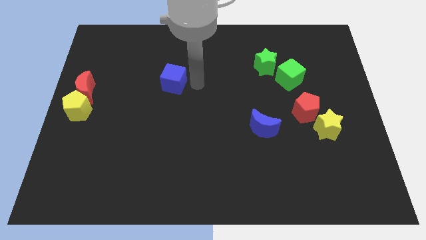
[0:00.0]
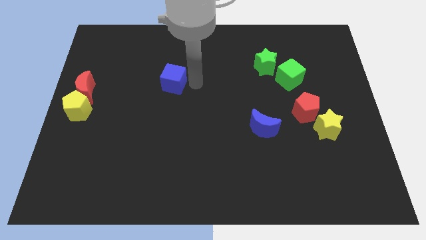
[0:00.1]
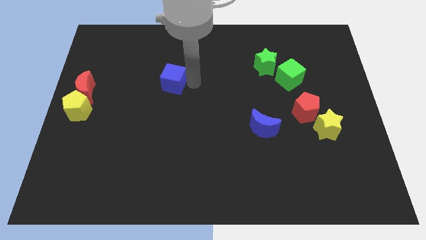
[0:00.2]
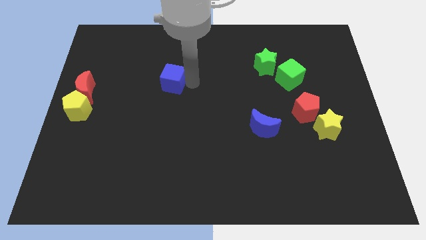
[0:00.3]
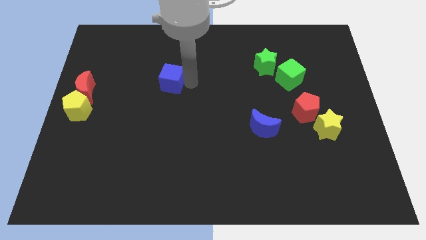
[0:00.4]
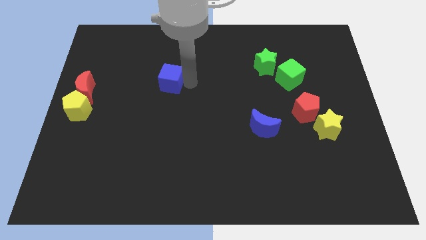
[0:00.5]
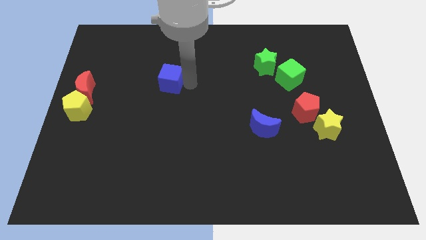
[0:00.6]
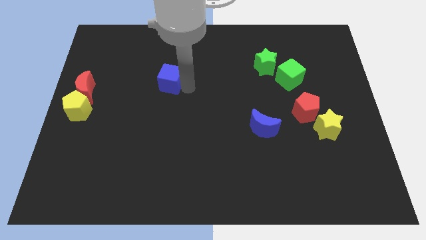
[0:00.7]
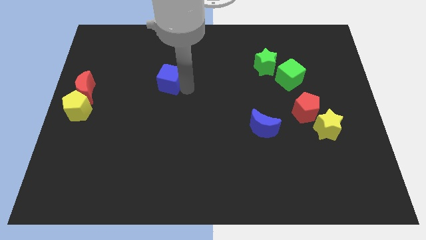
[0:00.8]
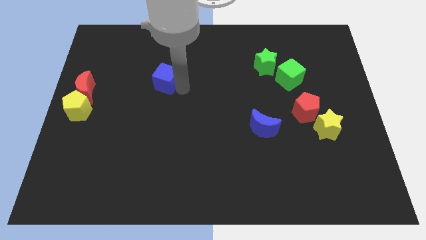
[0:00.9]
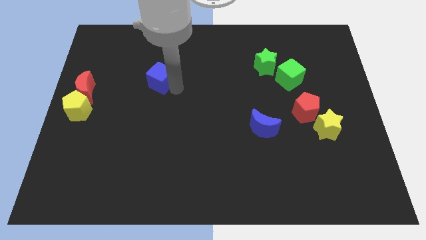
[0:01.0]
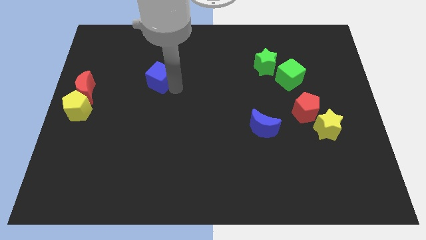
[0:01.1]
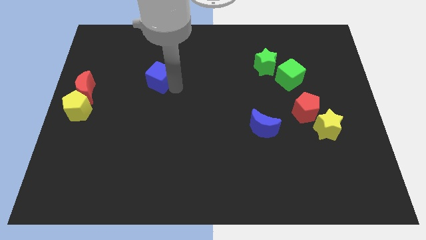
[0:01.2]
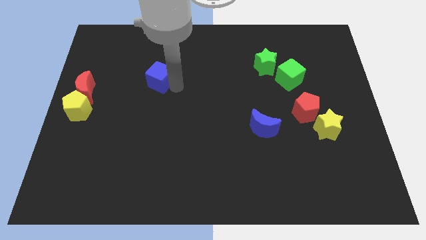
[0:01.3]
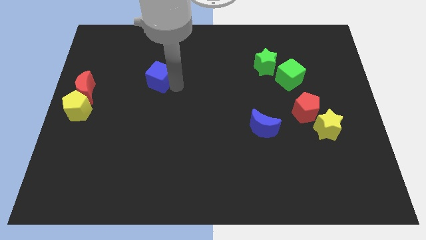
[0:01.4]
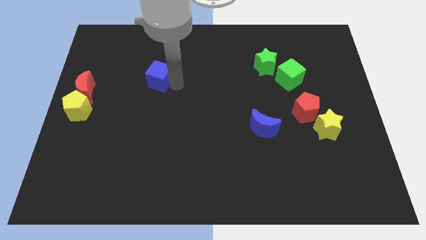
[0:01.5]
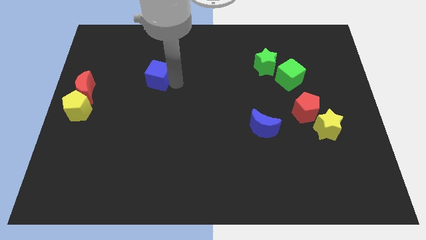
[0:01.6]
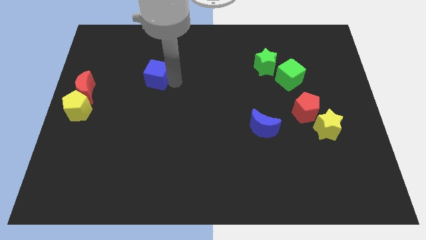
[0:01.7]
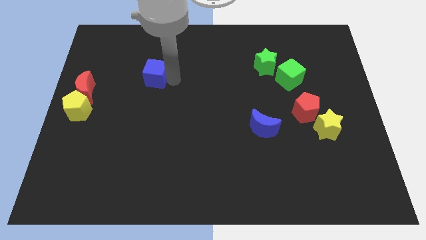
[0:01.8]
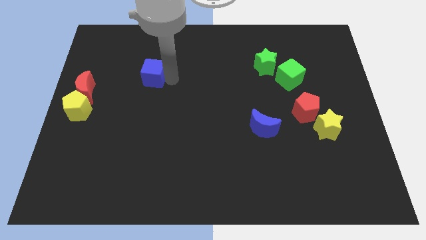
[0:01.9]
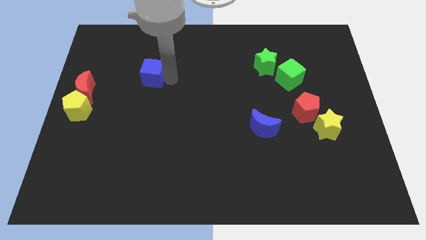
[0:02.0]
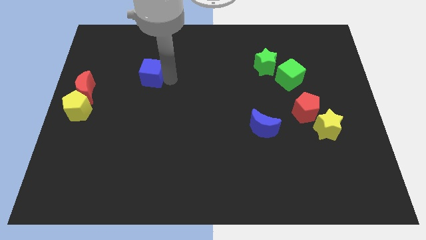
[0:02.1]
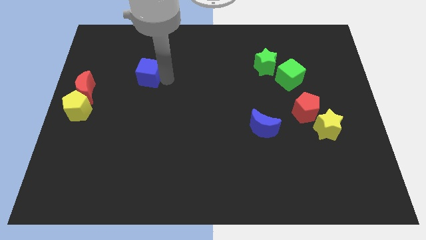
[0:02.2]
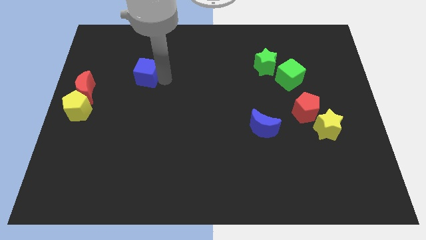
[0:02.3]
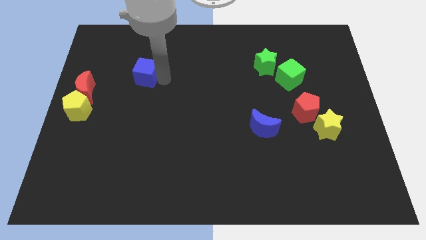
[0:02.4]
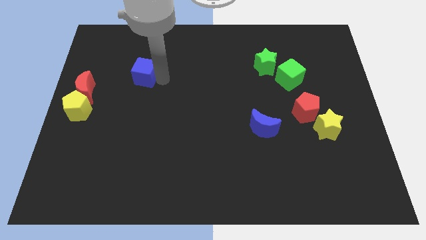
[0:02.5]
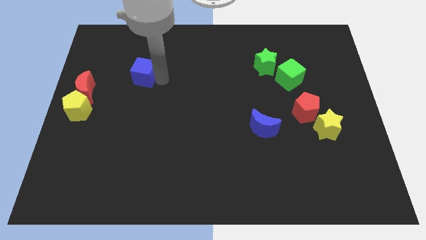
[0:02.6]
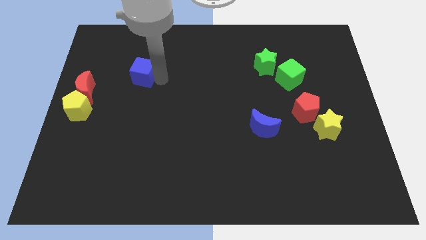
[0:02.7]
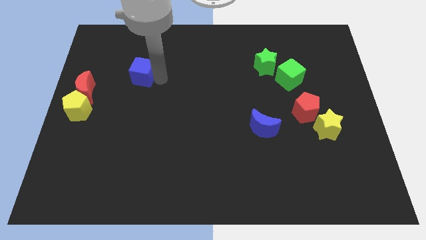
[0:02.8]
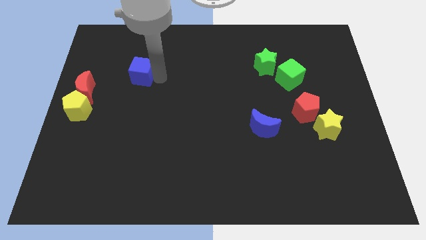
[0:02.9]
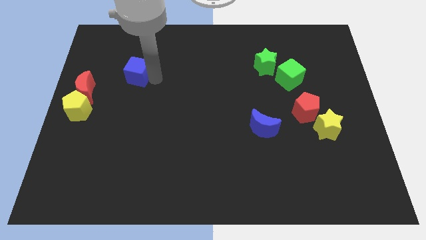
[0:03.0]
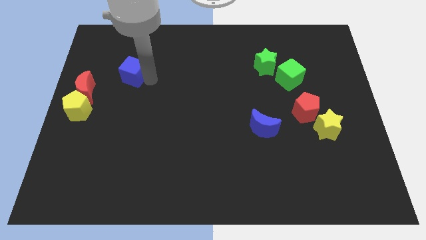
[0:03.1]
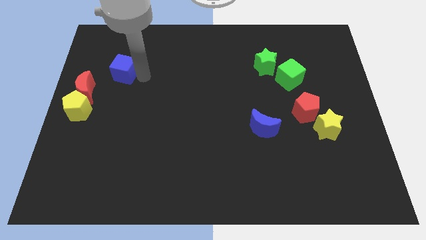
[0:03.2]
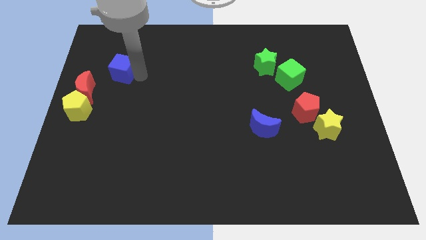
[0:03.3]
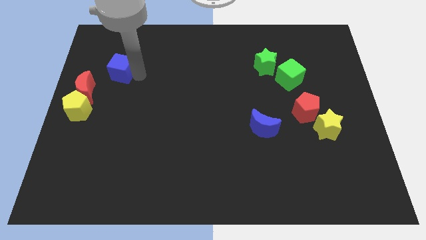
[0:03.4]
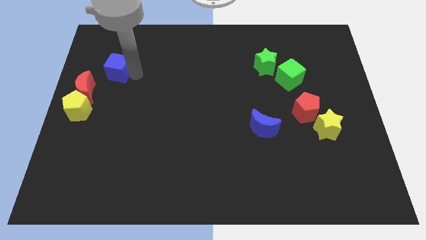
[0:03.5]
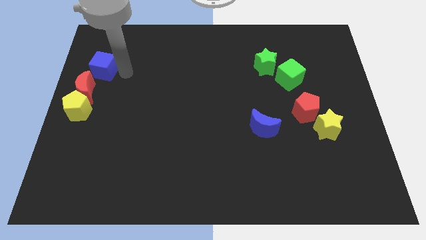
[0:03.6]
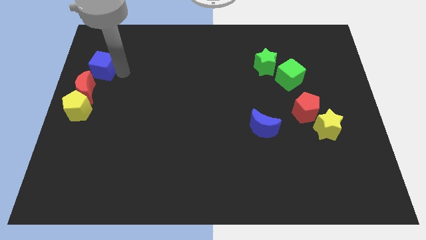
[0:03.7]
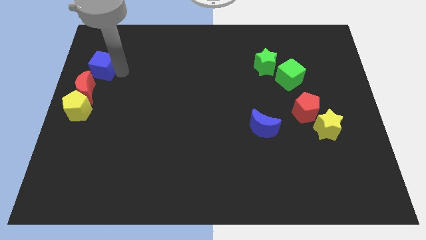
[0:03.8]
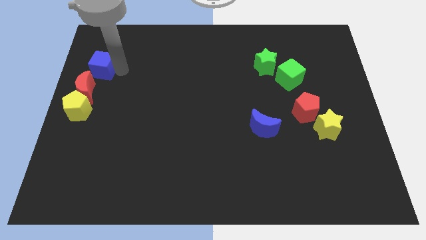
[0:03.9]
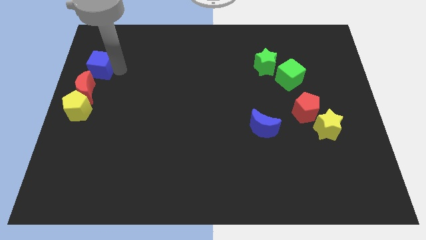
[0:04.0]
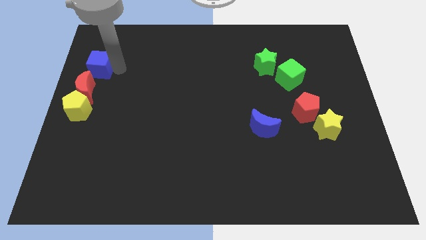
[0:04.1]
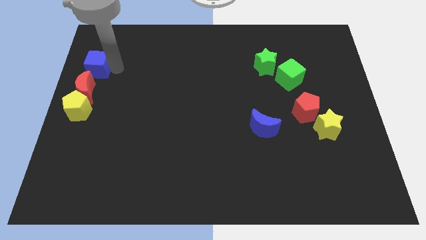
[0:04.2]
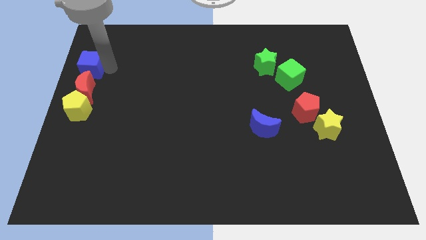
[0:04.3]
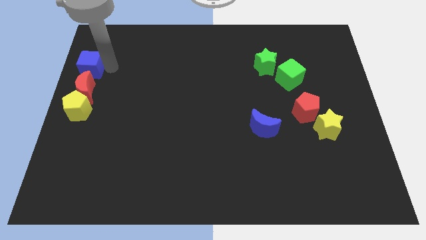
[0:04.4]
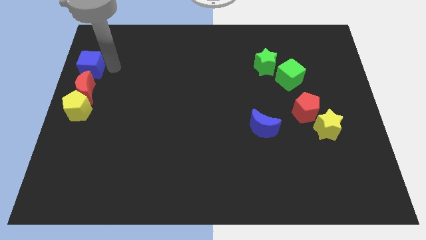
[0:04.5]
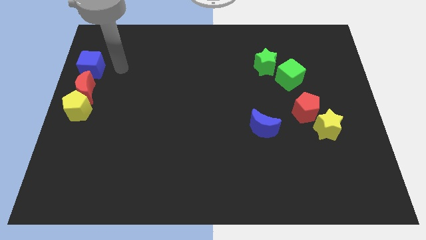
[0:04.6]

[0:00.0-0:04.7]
place the blue cube above the red crescent

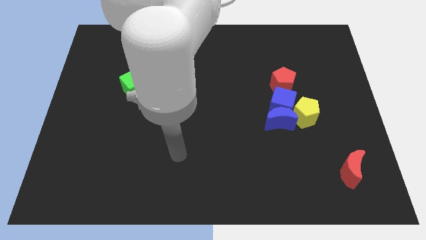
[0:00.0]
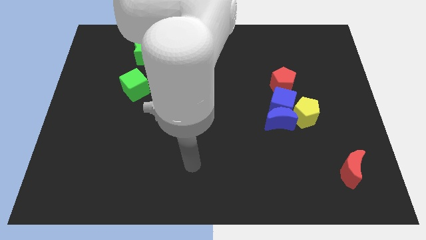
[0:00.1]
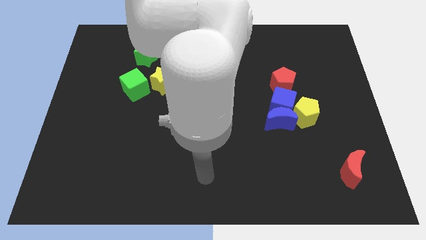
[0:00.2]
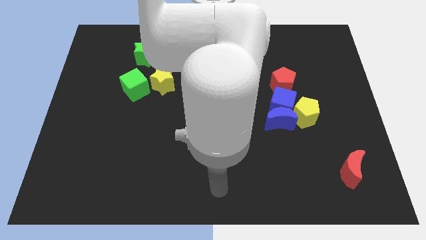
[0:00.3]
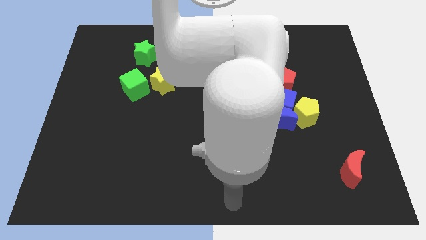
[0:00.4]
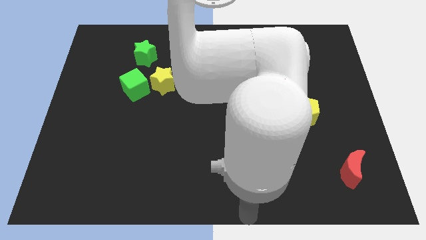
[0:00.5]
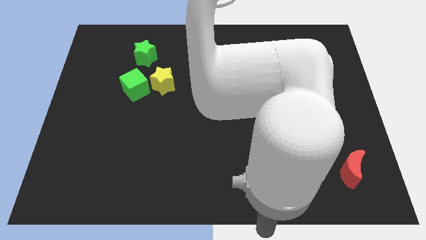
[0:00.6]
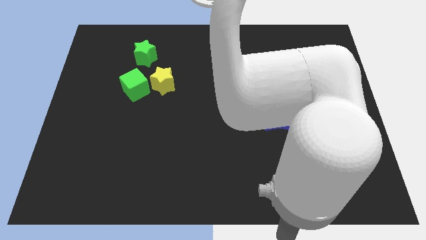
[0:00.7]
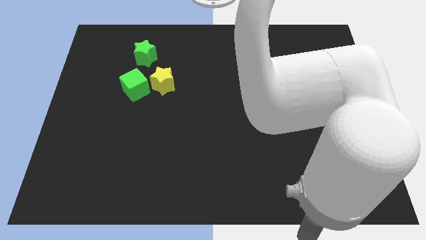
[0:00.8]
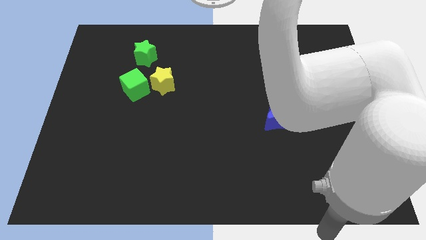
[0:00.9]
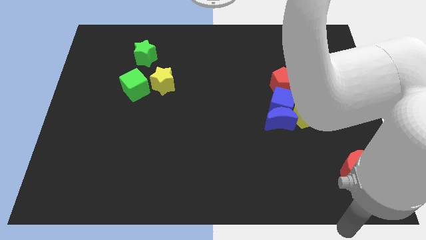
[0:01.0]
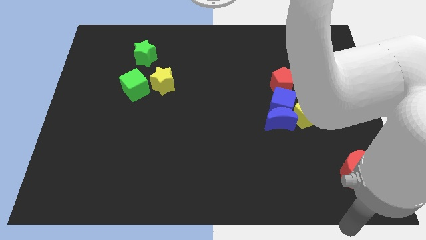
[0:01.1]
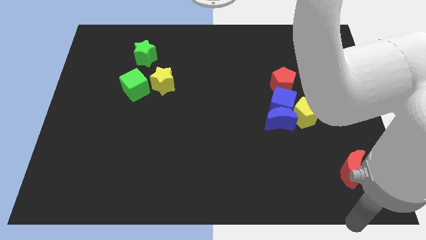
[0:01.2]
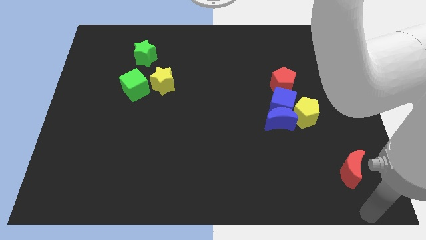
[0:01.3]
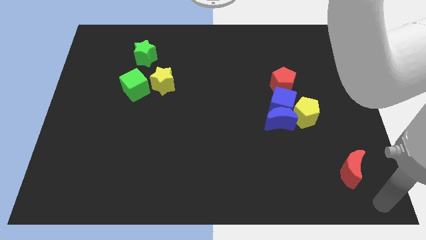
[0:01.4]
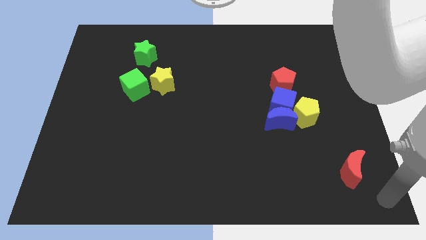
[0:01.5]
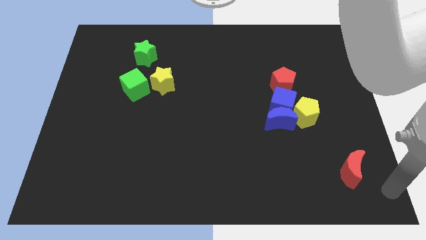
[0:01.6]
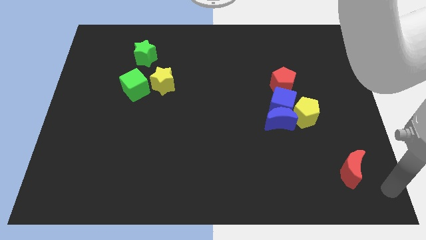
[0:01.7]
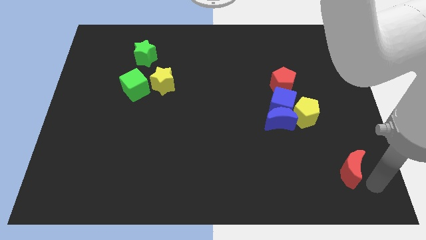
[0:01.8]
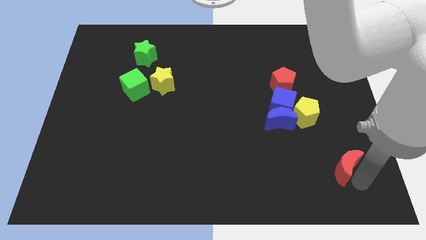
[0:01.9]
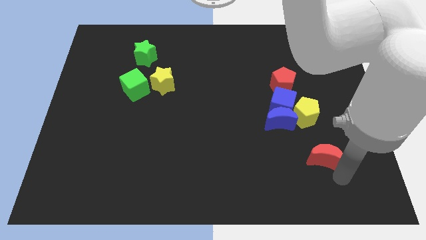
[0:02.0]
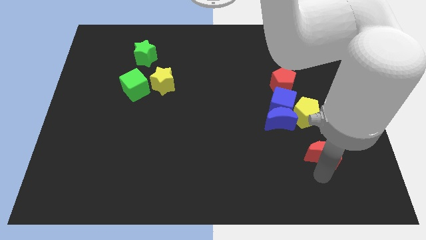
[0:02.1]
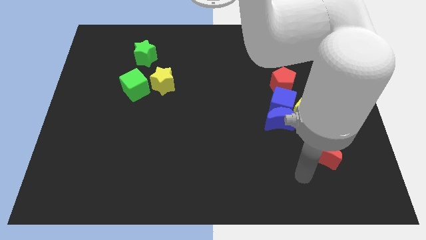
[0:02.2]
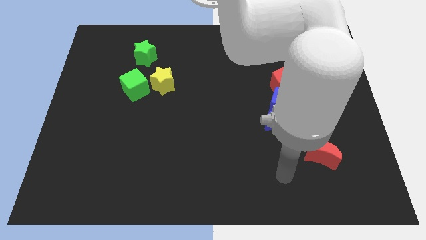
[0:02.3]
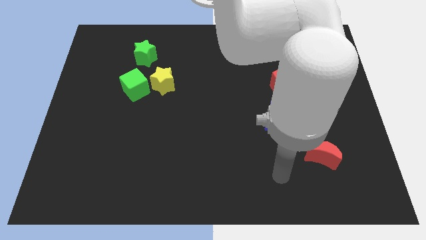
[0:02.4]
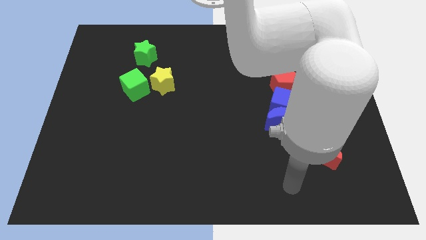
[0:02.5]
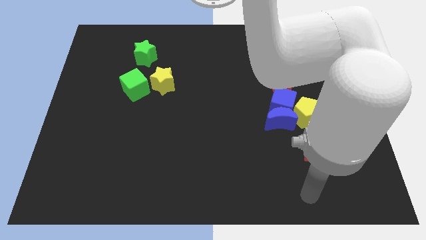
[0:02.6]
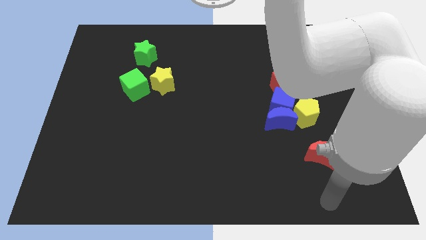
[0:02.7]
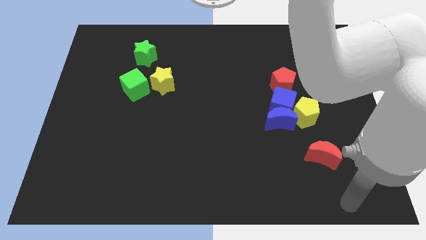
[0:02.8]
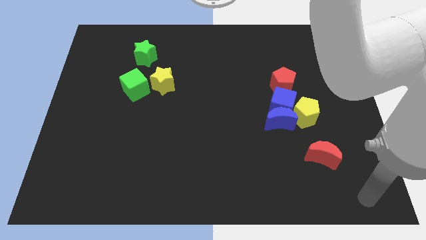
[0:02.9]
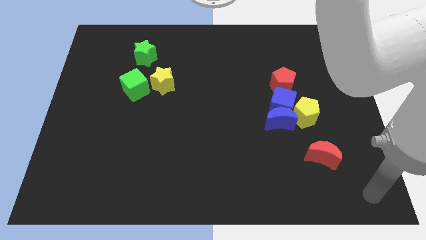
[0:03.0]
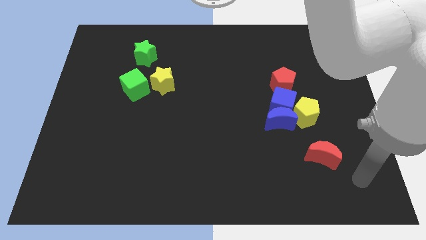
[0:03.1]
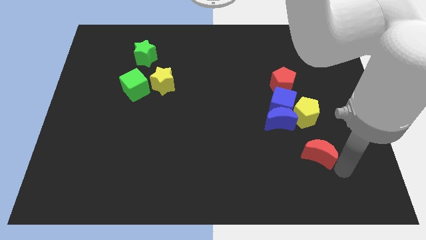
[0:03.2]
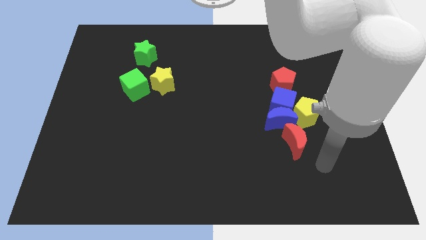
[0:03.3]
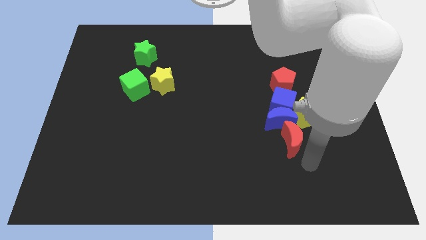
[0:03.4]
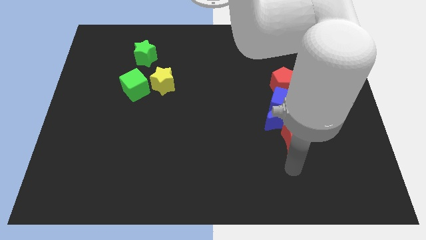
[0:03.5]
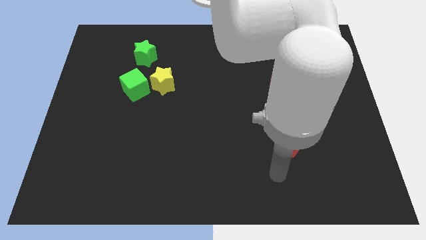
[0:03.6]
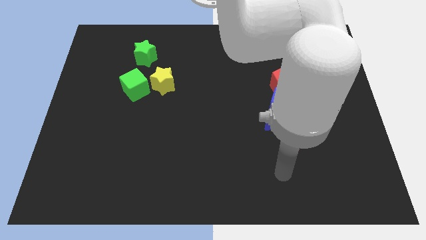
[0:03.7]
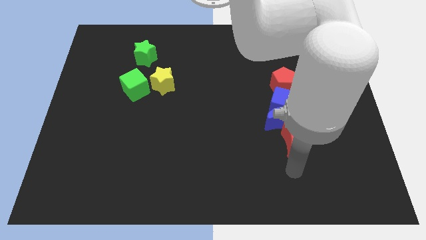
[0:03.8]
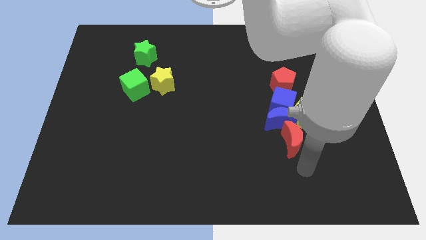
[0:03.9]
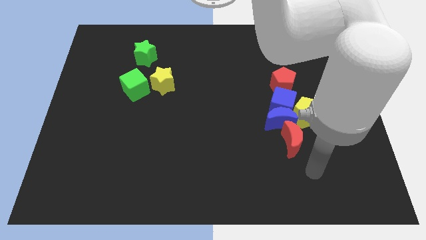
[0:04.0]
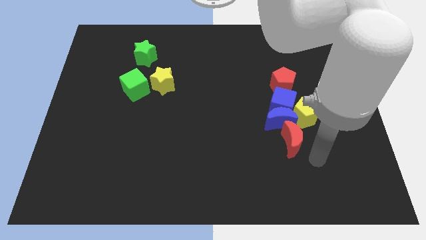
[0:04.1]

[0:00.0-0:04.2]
place the red crescent at the bottom of the blue crescent
